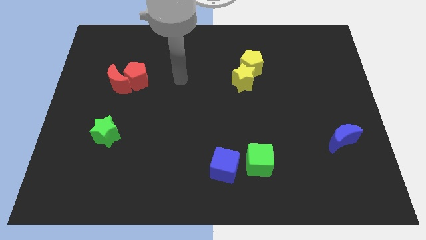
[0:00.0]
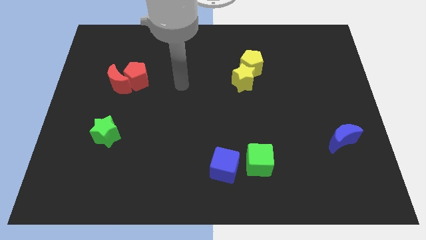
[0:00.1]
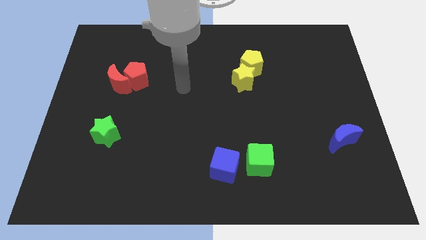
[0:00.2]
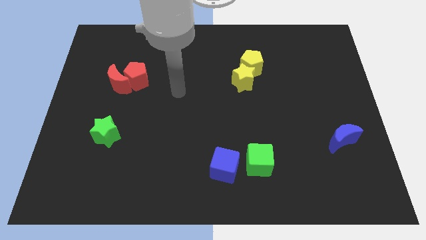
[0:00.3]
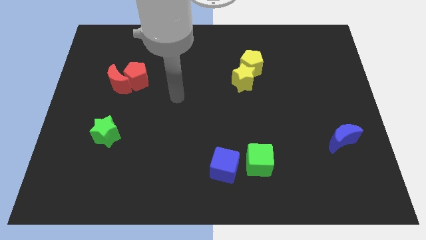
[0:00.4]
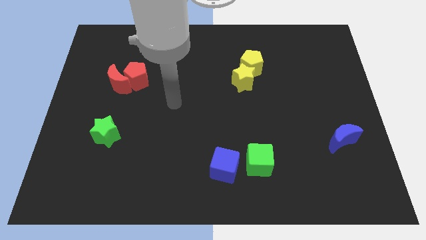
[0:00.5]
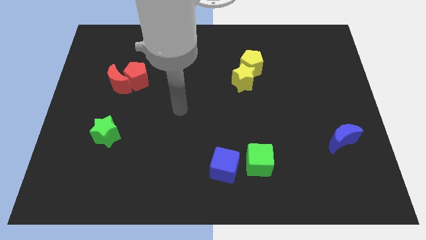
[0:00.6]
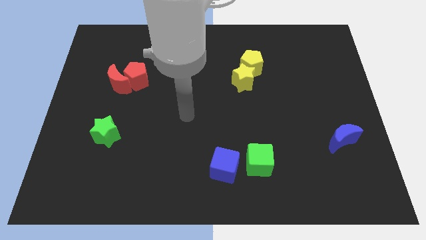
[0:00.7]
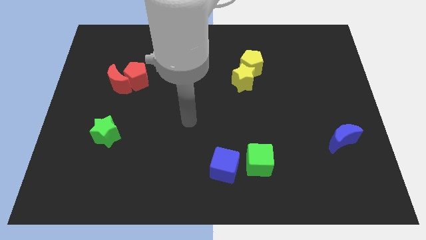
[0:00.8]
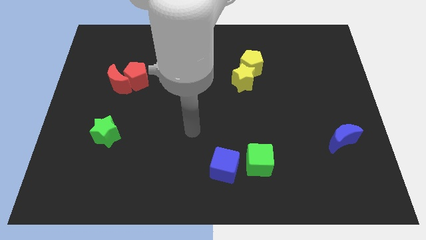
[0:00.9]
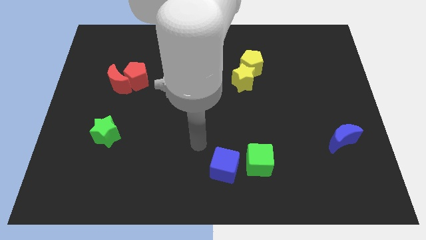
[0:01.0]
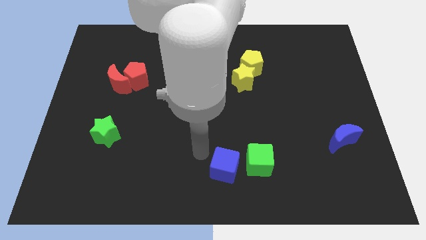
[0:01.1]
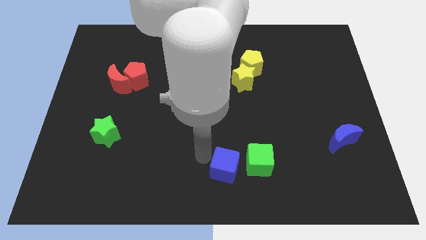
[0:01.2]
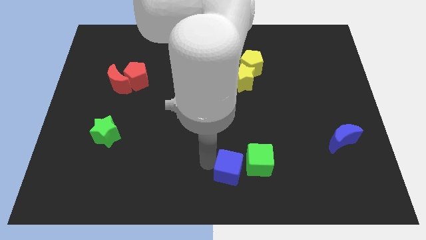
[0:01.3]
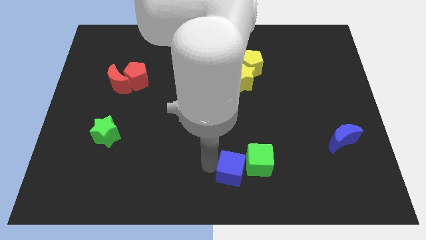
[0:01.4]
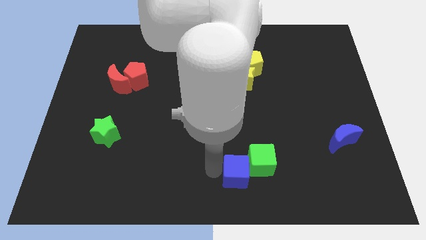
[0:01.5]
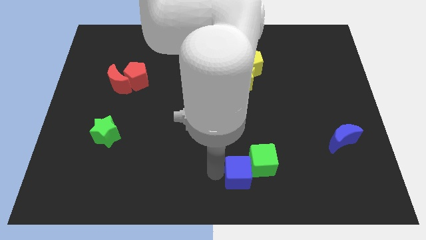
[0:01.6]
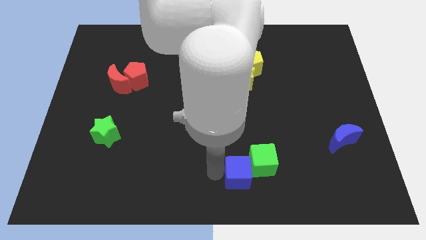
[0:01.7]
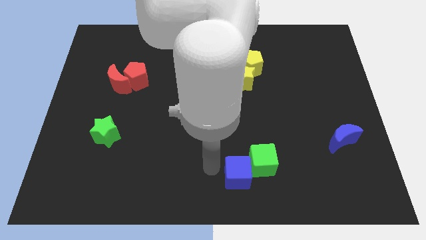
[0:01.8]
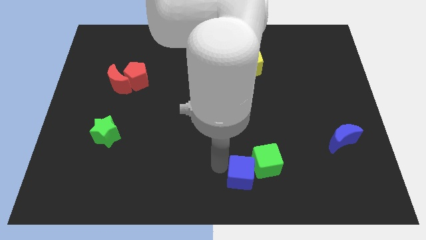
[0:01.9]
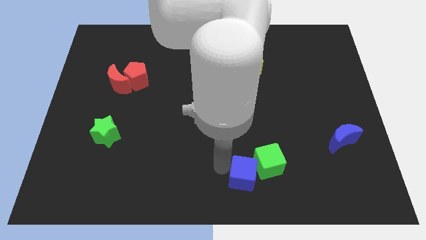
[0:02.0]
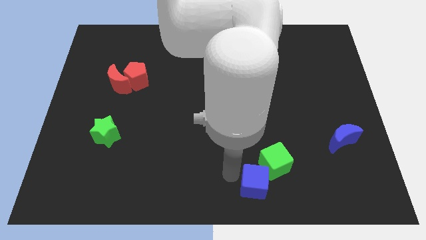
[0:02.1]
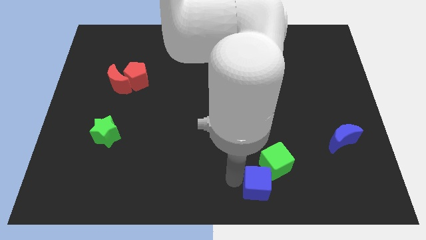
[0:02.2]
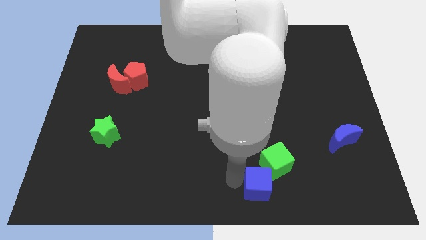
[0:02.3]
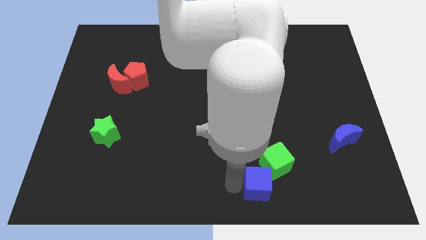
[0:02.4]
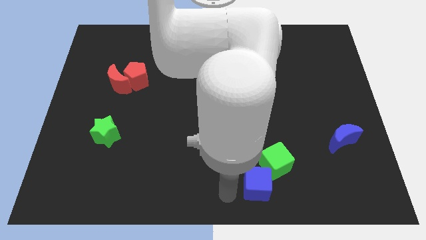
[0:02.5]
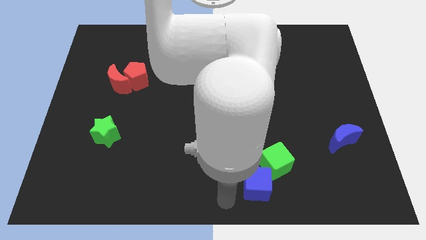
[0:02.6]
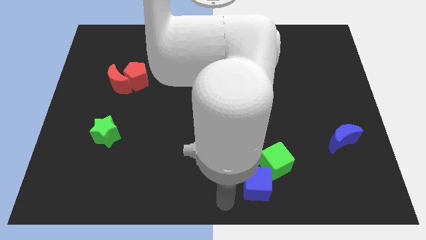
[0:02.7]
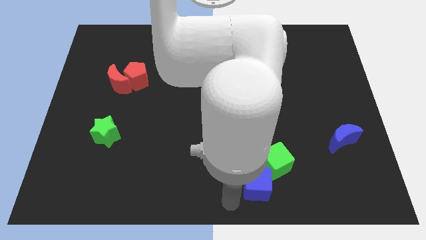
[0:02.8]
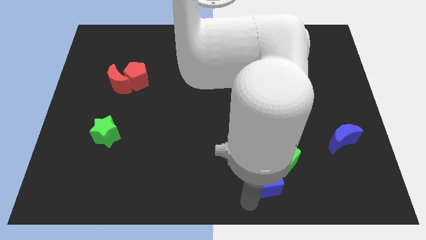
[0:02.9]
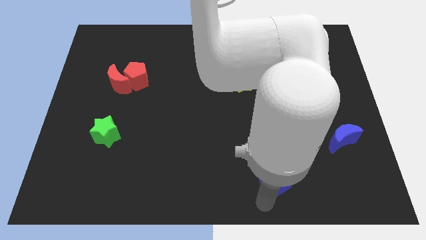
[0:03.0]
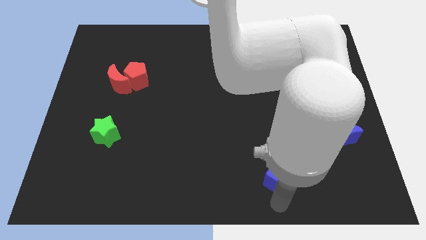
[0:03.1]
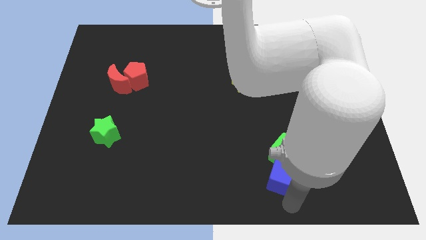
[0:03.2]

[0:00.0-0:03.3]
move the blue cube into the green cube

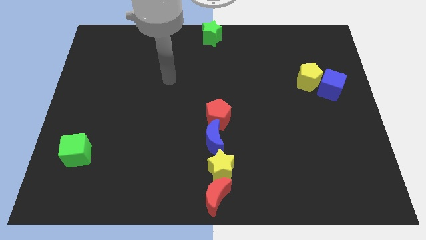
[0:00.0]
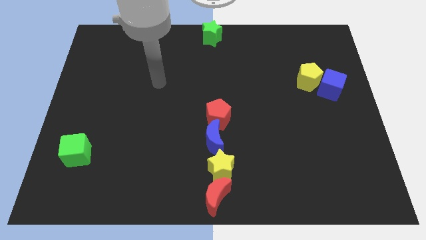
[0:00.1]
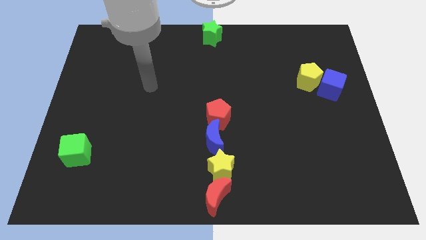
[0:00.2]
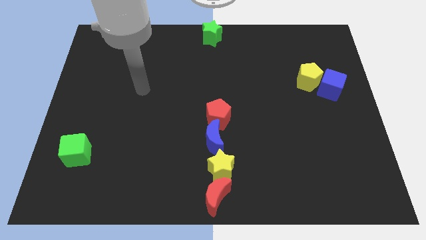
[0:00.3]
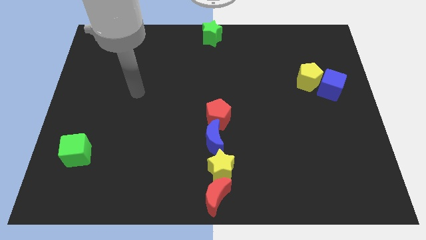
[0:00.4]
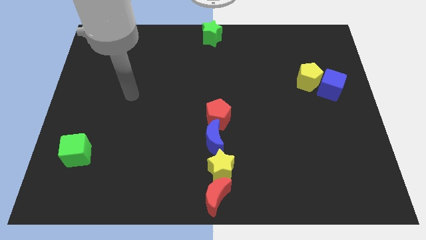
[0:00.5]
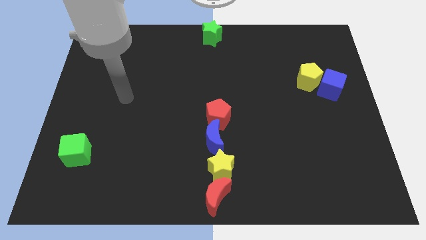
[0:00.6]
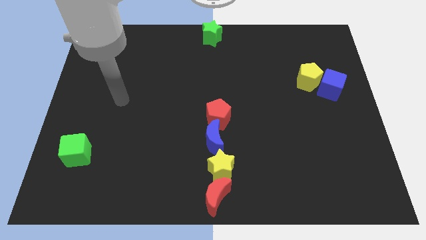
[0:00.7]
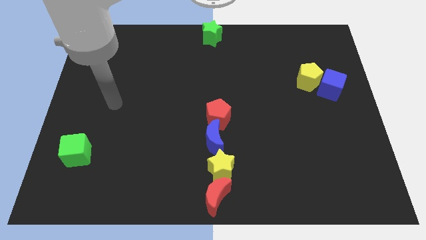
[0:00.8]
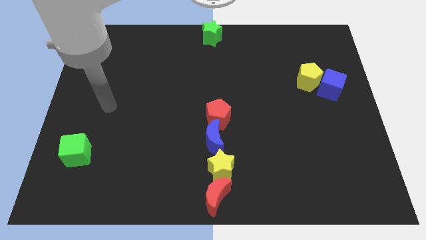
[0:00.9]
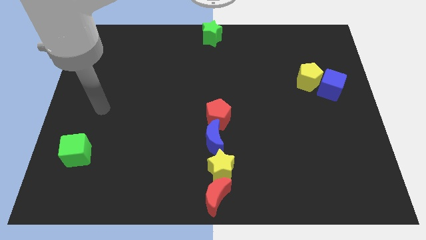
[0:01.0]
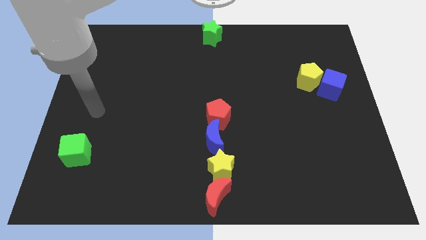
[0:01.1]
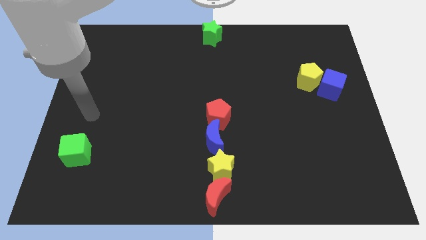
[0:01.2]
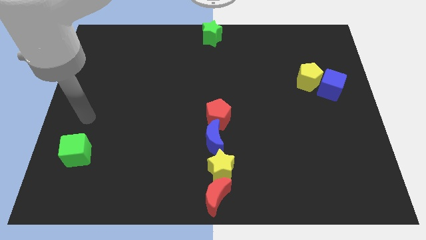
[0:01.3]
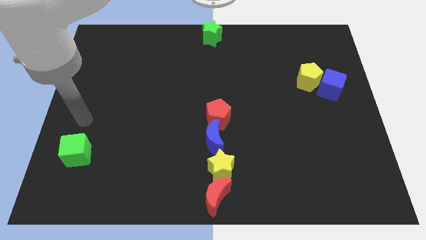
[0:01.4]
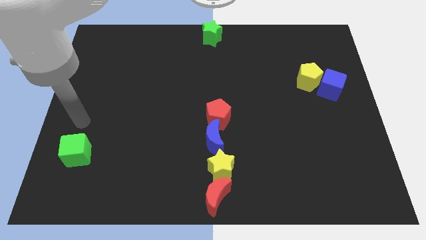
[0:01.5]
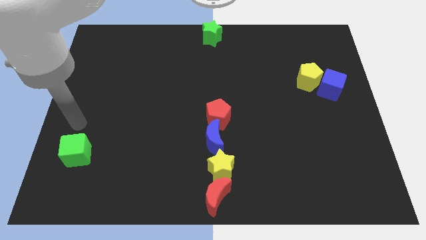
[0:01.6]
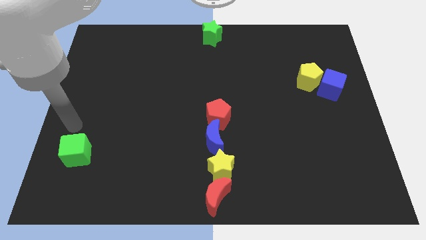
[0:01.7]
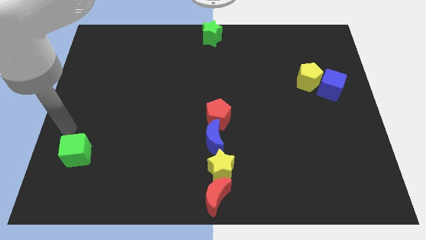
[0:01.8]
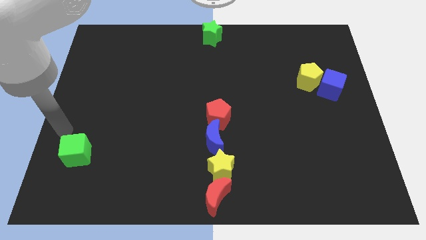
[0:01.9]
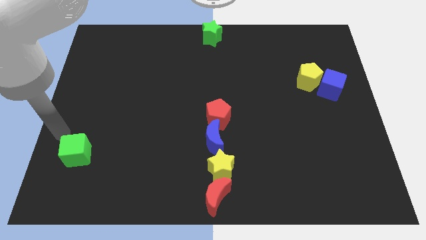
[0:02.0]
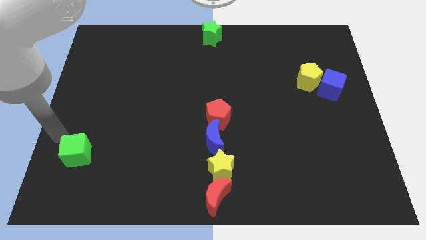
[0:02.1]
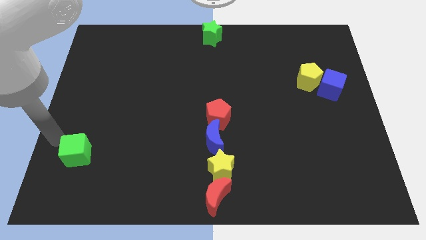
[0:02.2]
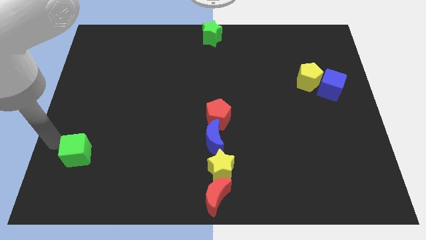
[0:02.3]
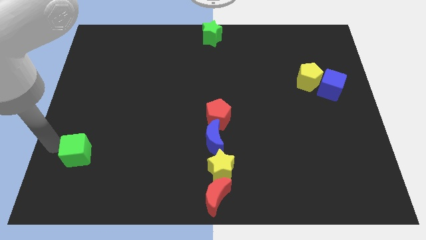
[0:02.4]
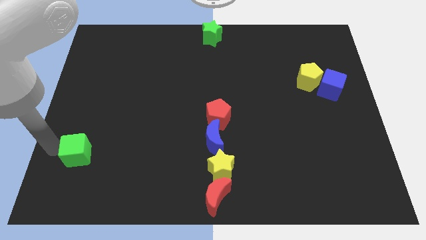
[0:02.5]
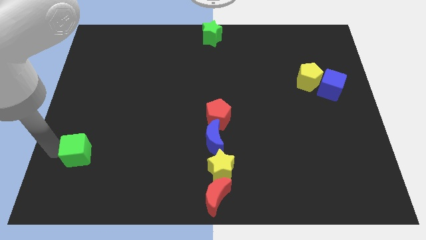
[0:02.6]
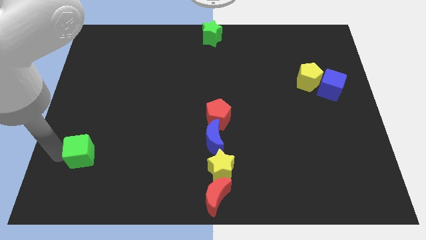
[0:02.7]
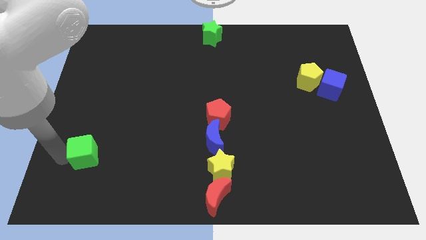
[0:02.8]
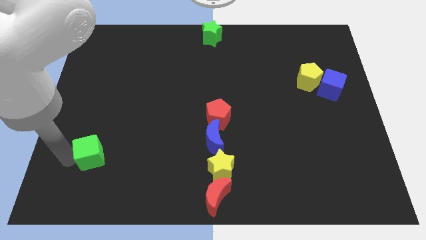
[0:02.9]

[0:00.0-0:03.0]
point your arm close to green cube

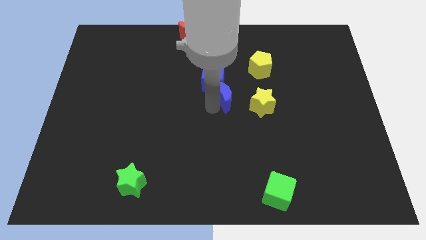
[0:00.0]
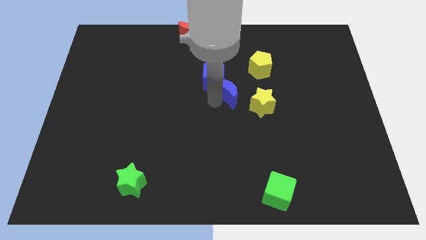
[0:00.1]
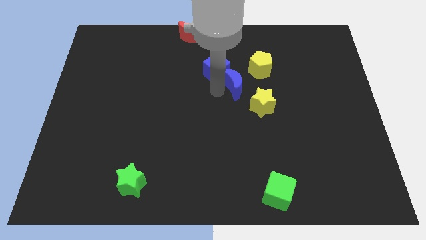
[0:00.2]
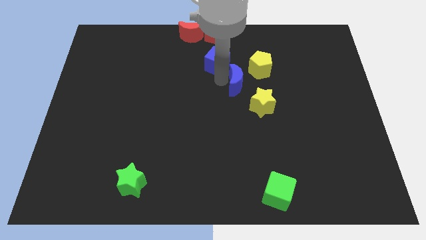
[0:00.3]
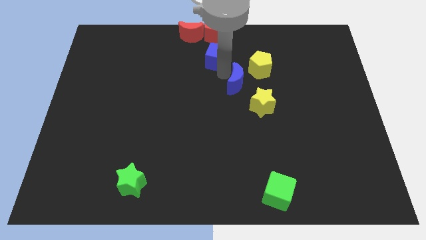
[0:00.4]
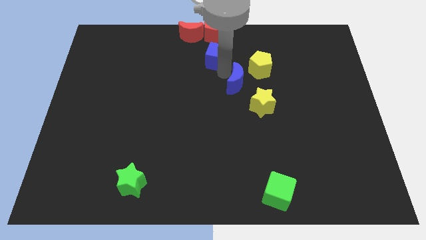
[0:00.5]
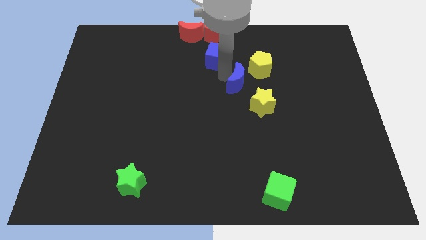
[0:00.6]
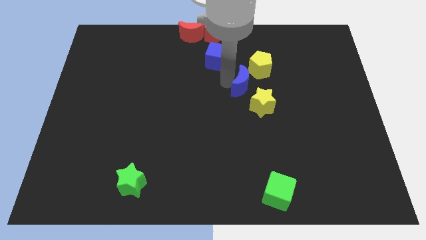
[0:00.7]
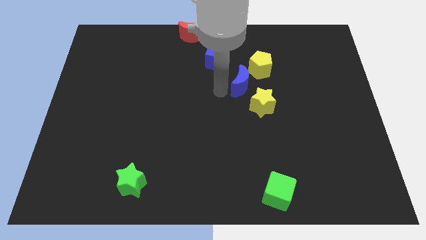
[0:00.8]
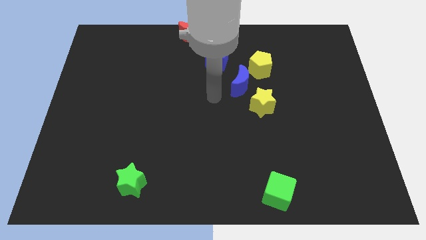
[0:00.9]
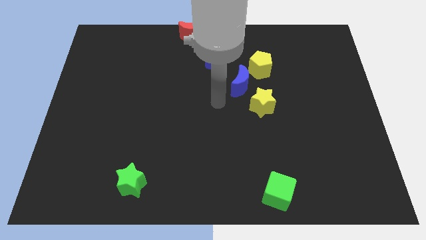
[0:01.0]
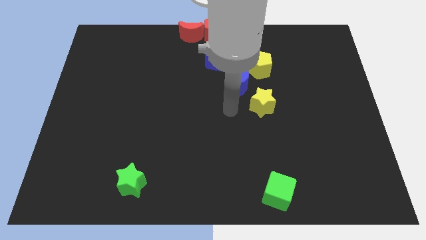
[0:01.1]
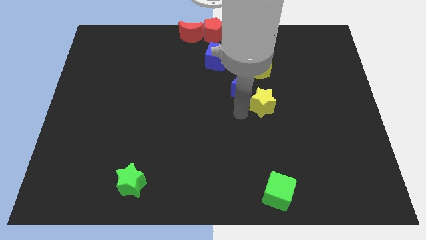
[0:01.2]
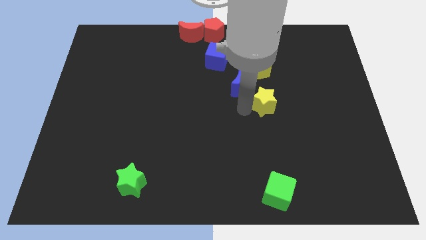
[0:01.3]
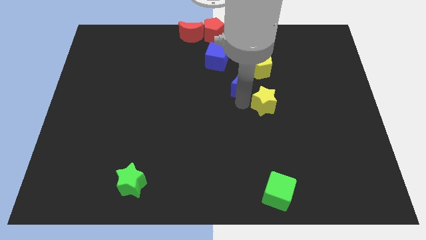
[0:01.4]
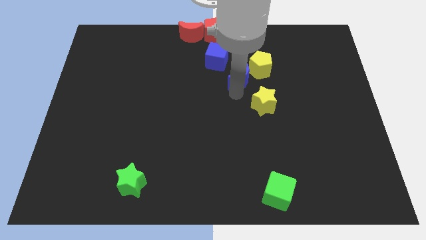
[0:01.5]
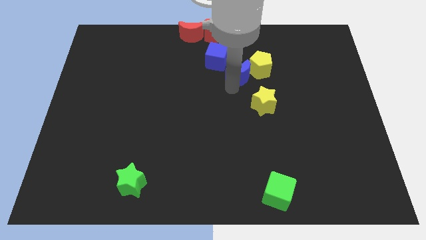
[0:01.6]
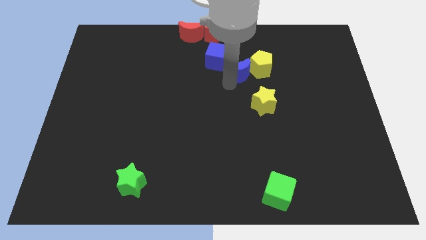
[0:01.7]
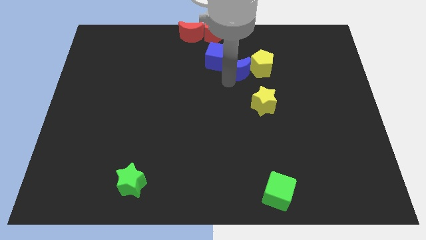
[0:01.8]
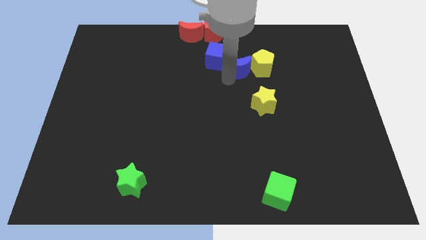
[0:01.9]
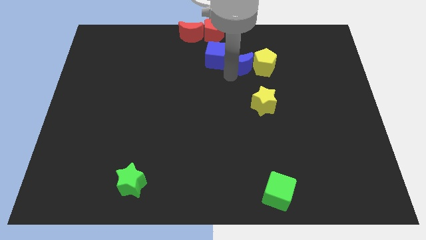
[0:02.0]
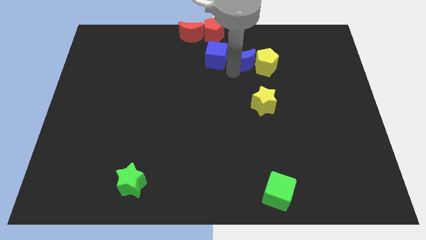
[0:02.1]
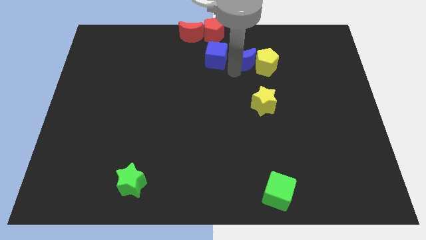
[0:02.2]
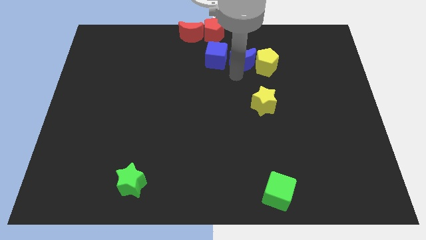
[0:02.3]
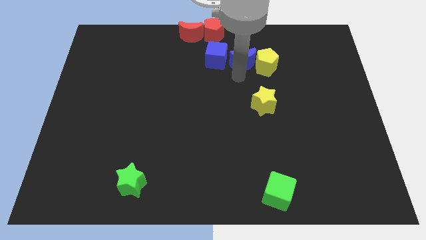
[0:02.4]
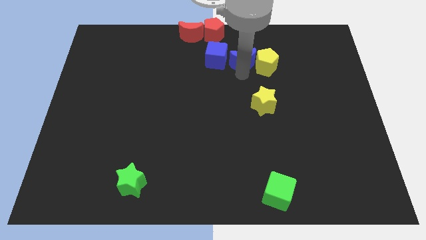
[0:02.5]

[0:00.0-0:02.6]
place blue moon between blue cube and yellow pentagon

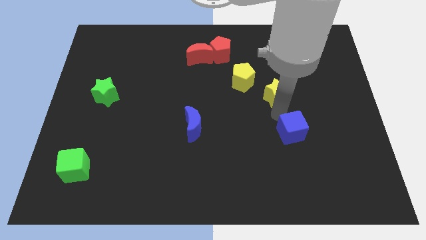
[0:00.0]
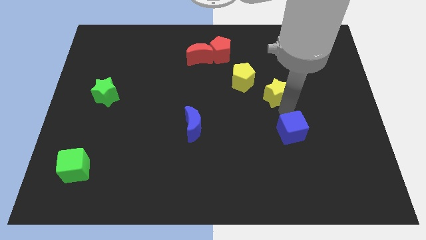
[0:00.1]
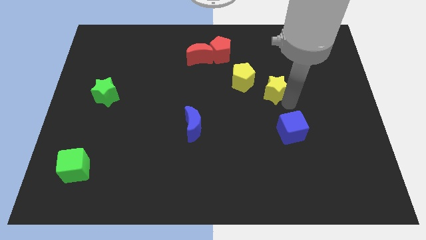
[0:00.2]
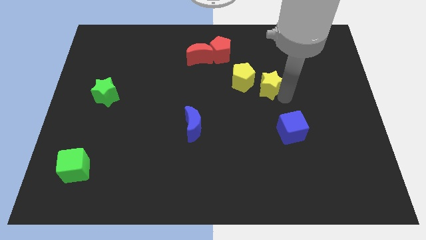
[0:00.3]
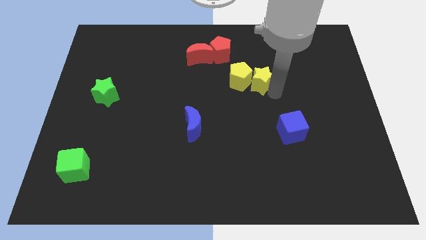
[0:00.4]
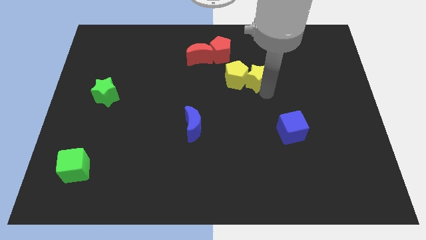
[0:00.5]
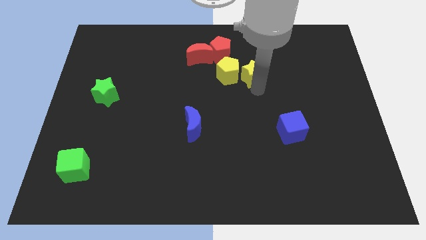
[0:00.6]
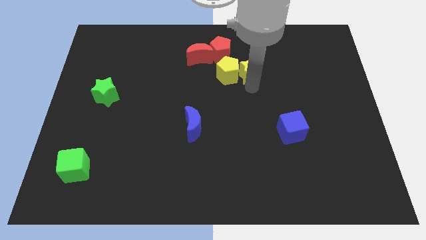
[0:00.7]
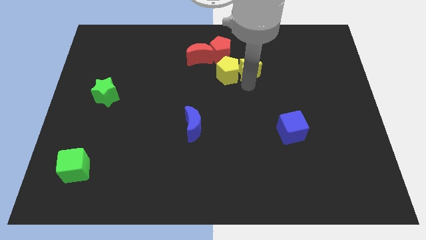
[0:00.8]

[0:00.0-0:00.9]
move the yellow star to the right of the yellow pentagon
